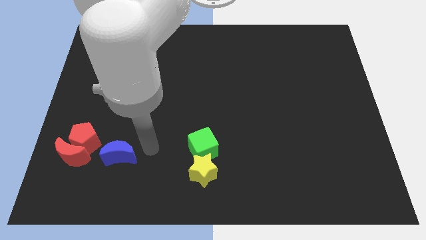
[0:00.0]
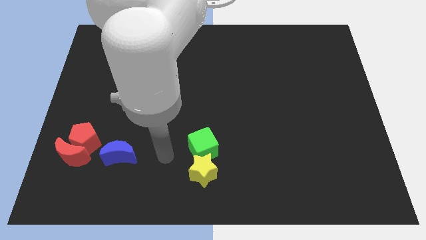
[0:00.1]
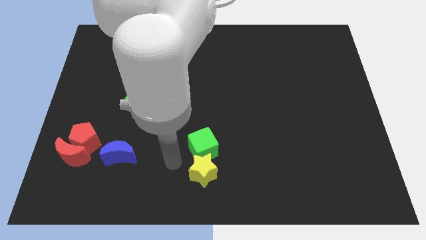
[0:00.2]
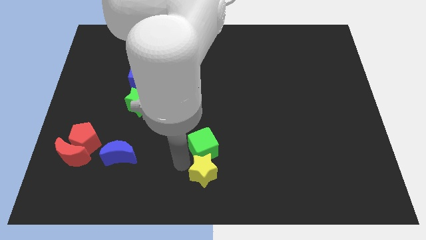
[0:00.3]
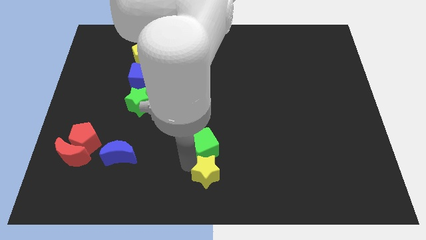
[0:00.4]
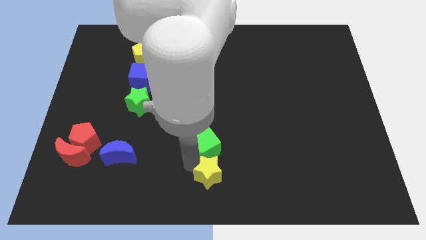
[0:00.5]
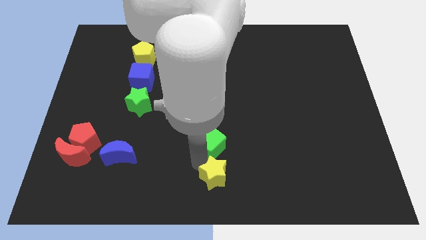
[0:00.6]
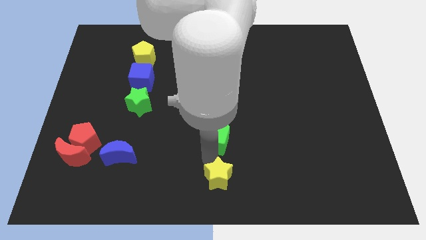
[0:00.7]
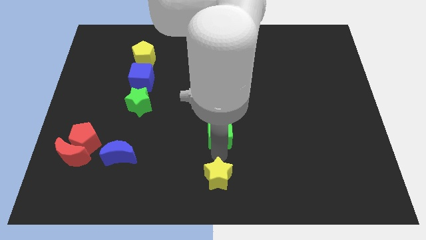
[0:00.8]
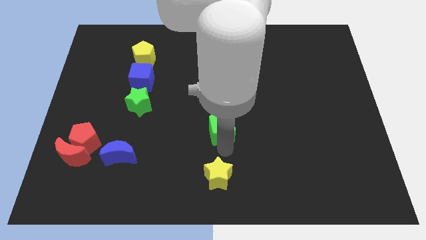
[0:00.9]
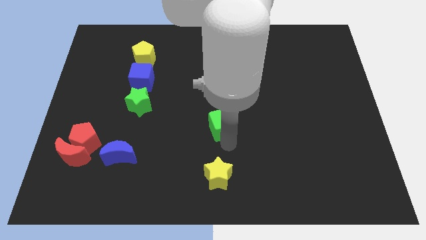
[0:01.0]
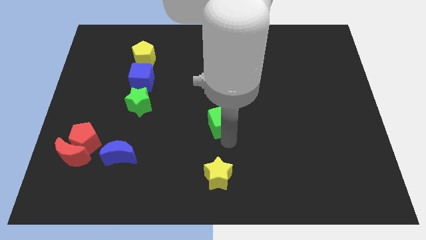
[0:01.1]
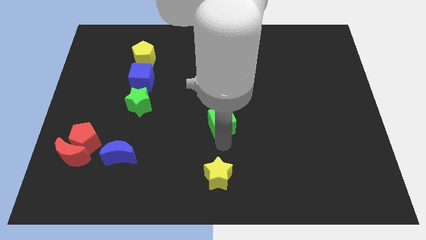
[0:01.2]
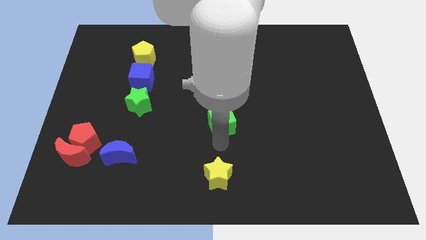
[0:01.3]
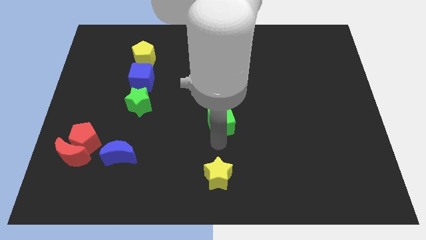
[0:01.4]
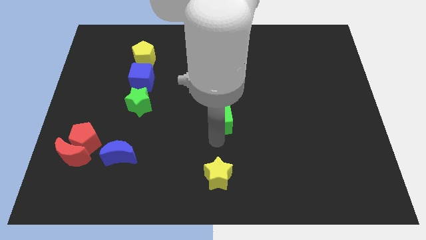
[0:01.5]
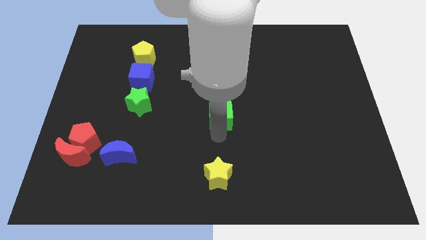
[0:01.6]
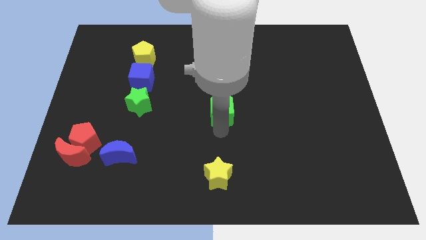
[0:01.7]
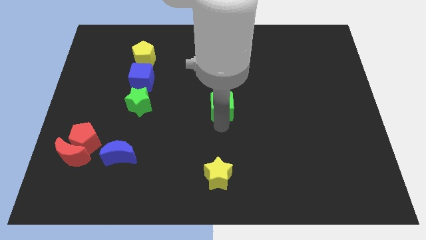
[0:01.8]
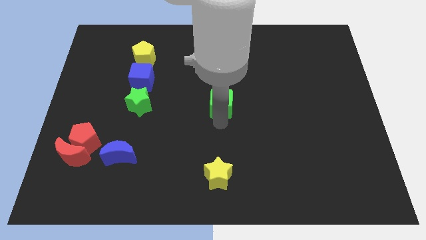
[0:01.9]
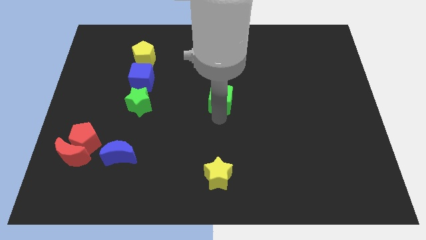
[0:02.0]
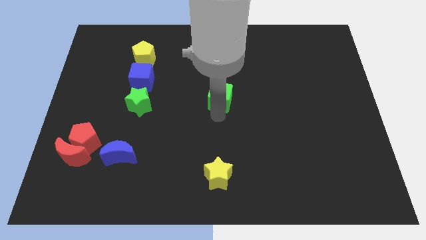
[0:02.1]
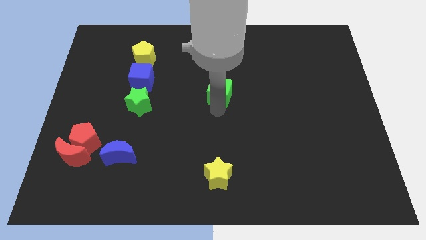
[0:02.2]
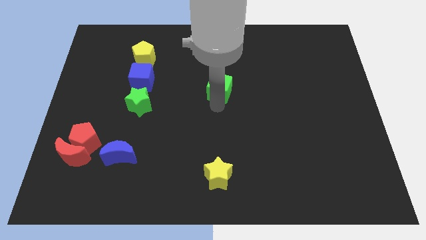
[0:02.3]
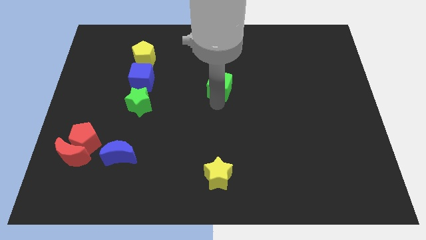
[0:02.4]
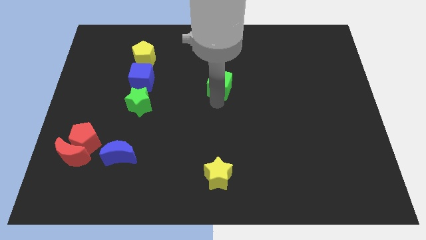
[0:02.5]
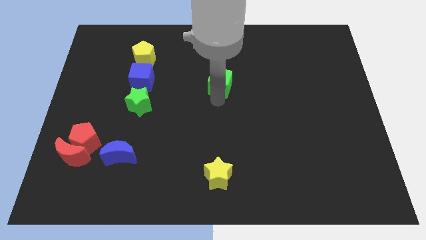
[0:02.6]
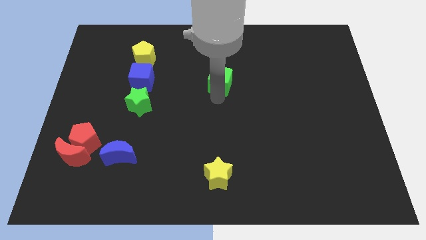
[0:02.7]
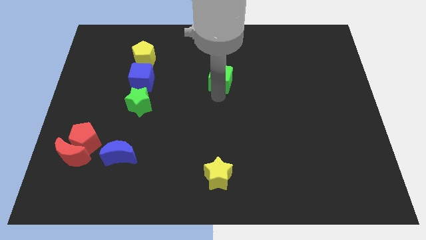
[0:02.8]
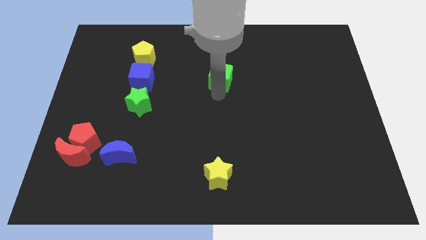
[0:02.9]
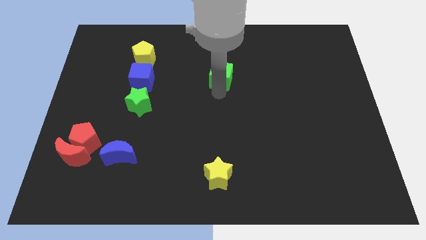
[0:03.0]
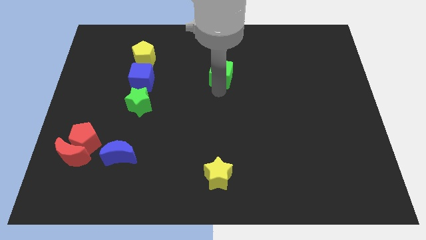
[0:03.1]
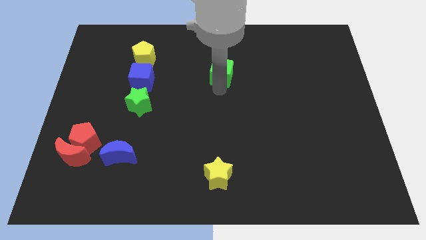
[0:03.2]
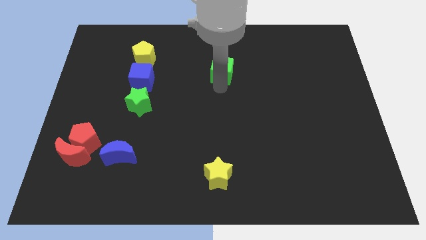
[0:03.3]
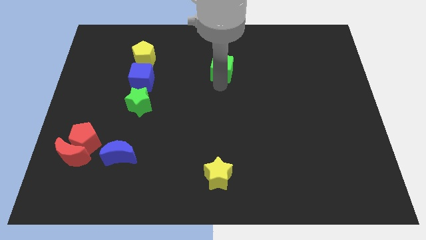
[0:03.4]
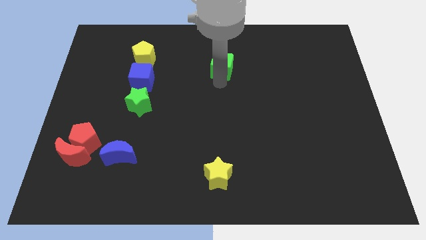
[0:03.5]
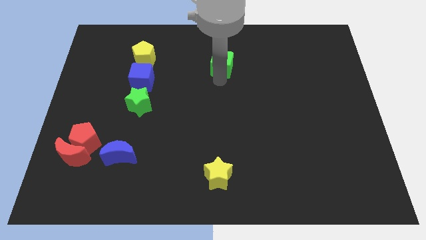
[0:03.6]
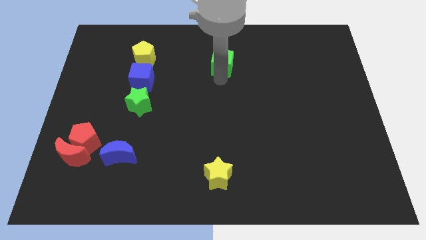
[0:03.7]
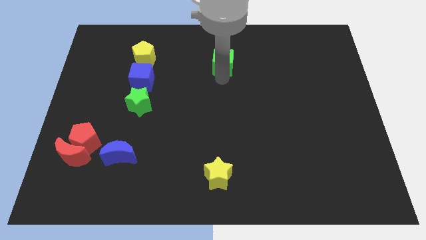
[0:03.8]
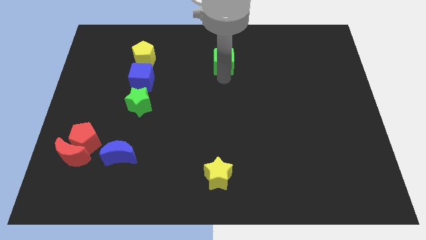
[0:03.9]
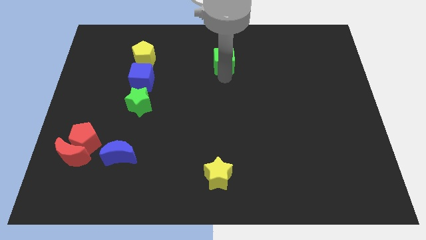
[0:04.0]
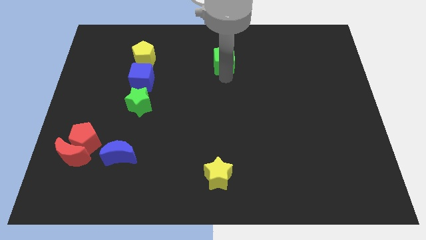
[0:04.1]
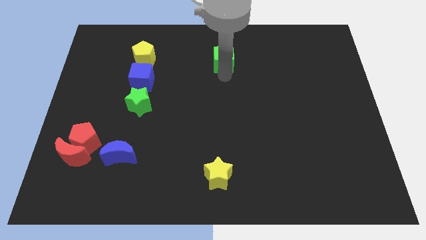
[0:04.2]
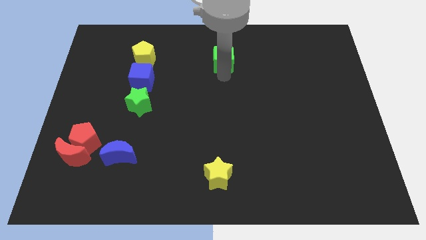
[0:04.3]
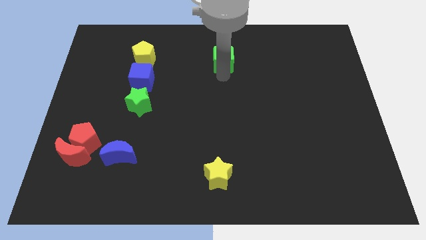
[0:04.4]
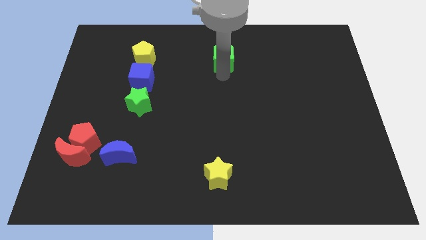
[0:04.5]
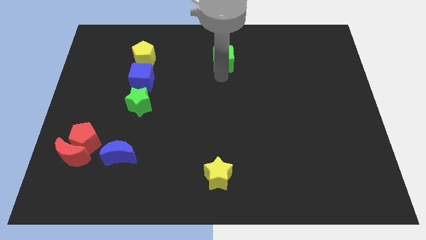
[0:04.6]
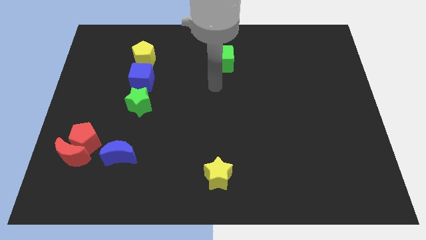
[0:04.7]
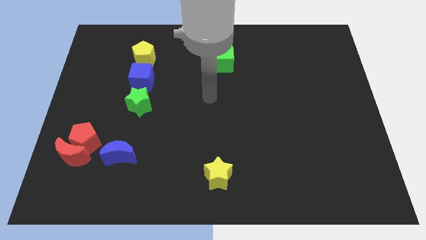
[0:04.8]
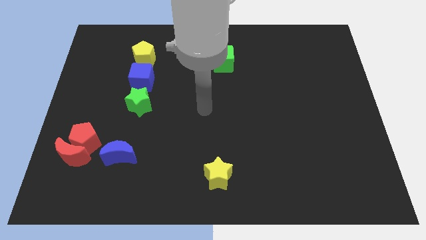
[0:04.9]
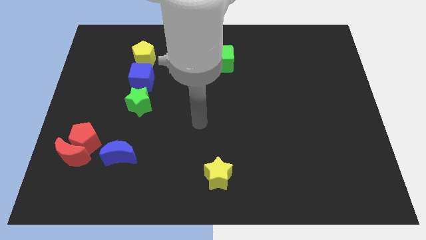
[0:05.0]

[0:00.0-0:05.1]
move the green cube to the top center of the board

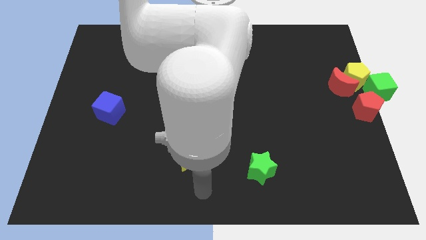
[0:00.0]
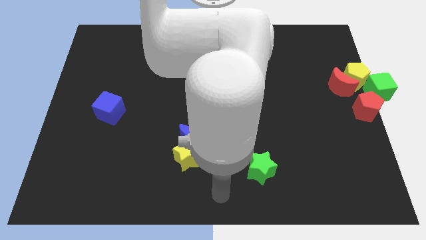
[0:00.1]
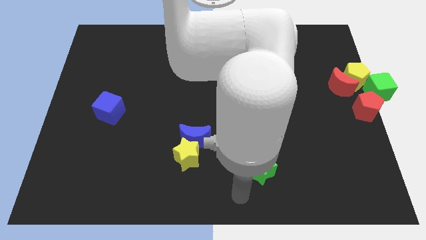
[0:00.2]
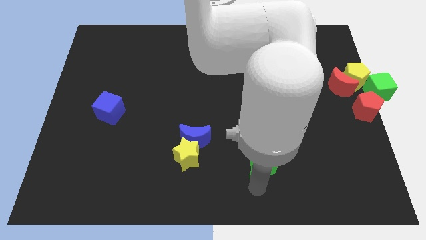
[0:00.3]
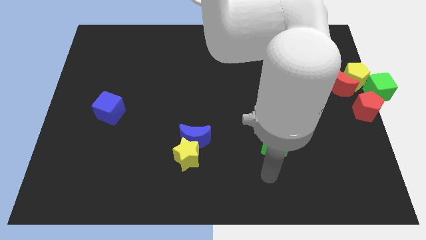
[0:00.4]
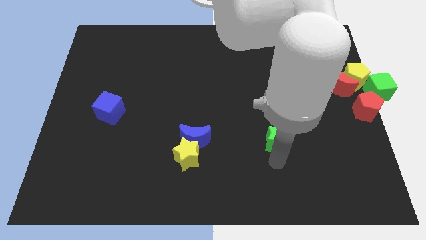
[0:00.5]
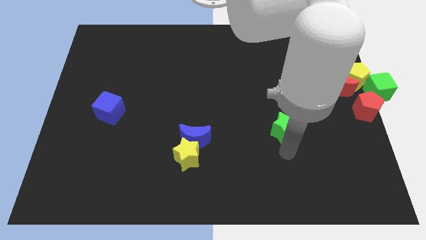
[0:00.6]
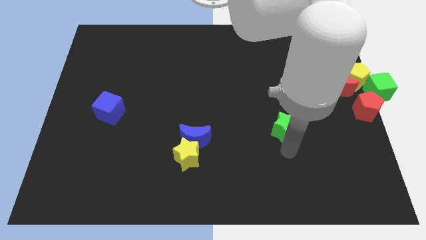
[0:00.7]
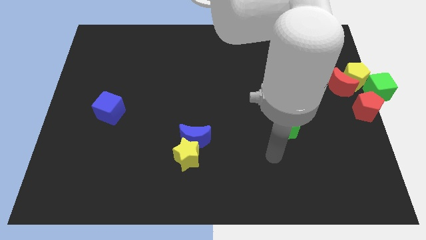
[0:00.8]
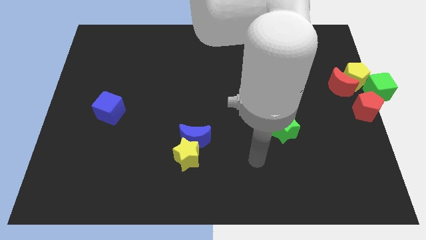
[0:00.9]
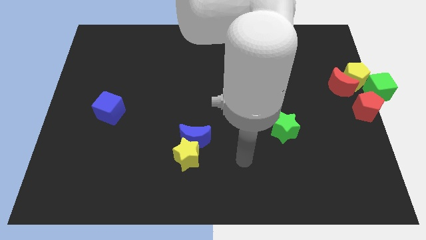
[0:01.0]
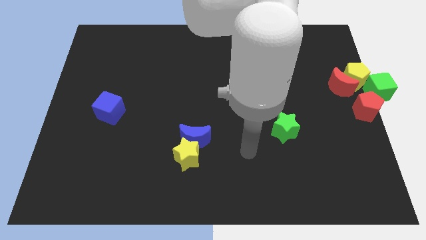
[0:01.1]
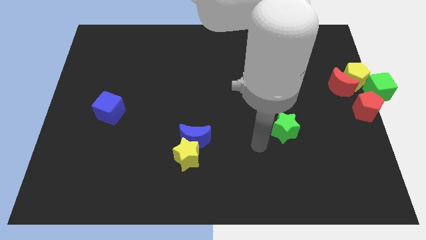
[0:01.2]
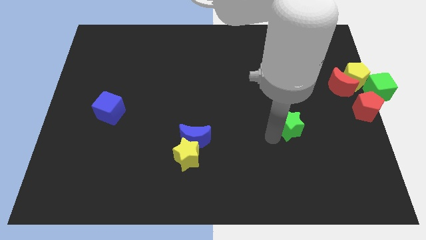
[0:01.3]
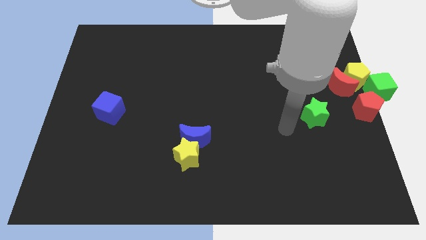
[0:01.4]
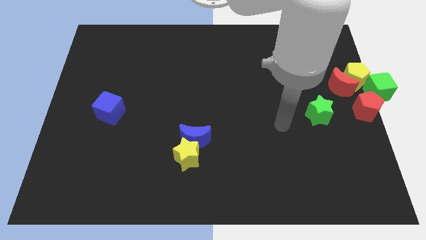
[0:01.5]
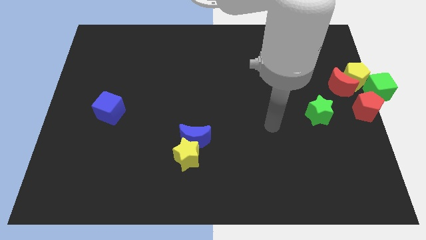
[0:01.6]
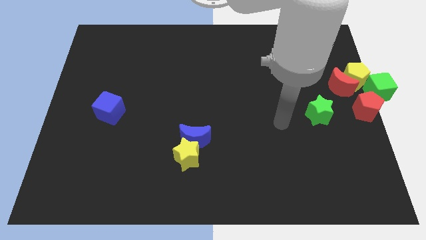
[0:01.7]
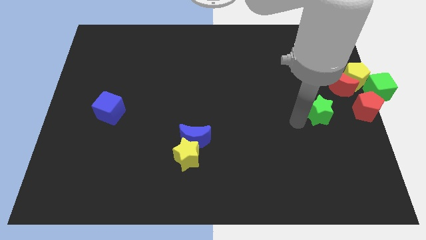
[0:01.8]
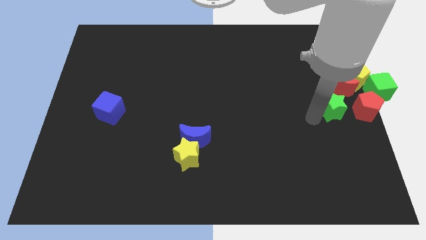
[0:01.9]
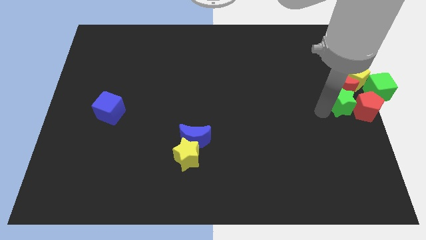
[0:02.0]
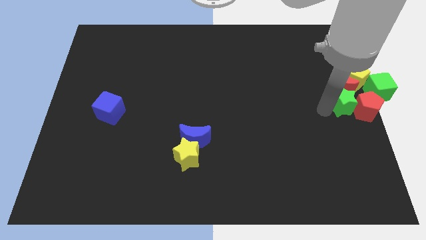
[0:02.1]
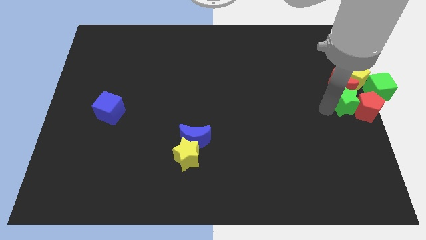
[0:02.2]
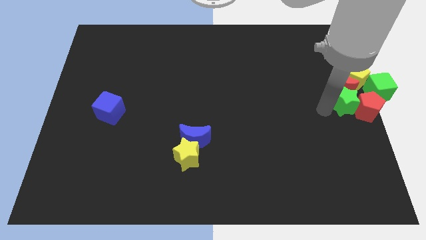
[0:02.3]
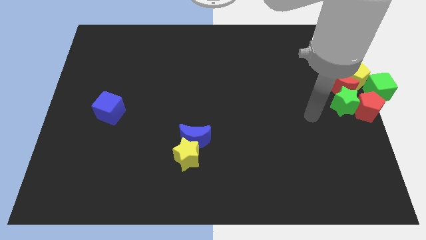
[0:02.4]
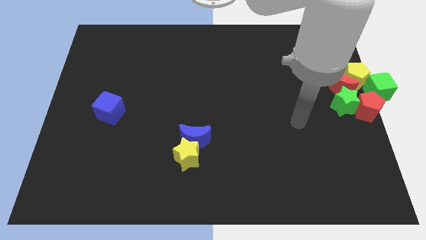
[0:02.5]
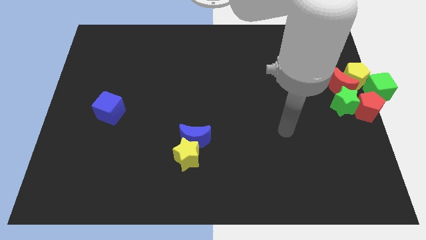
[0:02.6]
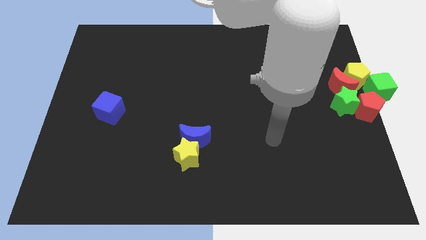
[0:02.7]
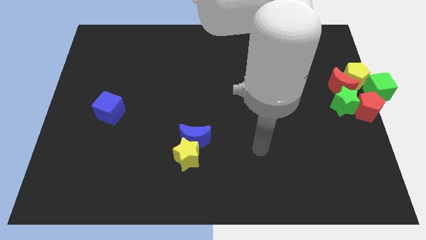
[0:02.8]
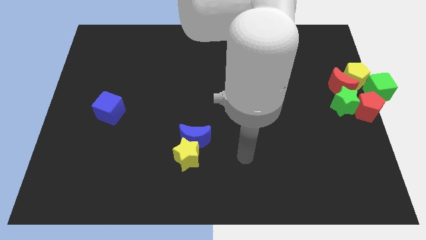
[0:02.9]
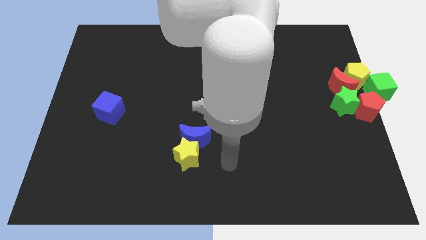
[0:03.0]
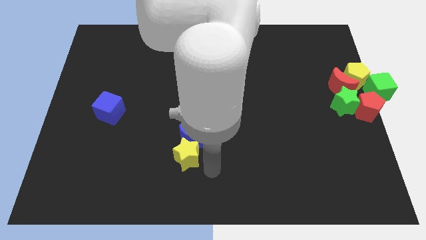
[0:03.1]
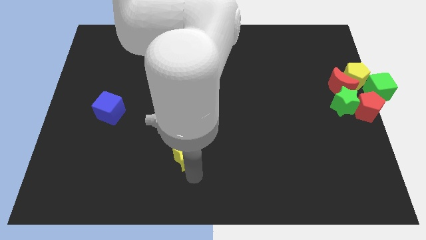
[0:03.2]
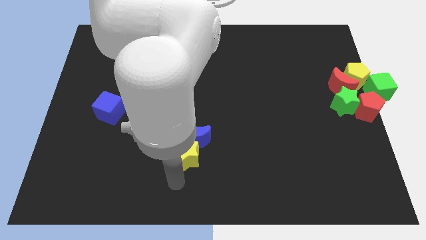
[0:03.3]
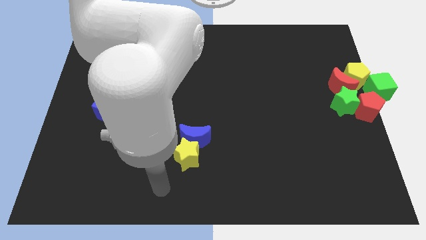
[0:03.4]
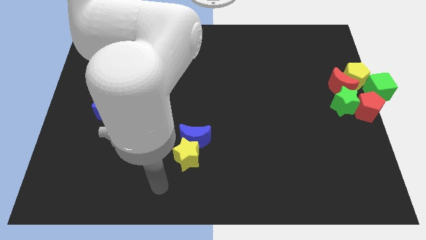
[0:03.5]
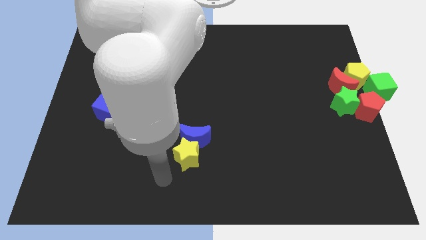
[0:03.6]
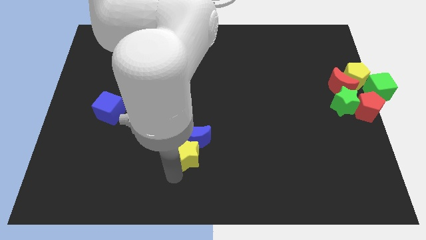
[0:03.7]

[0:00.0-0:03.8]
push the green star into red pentagon and red moon
